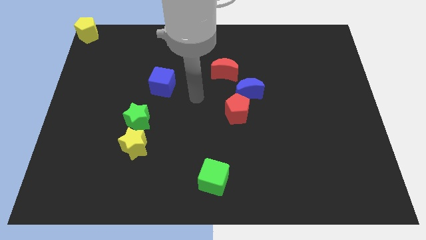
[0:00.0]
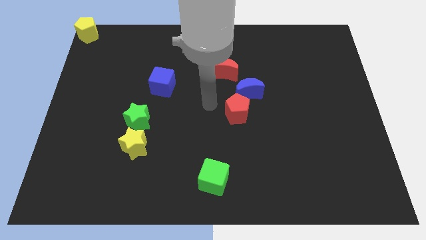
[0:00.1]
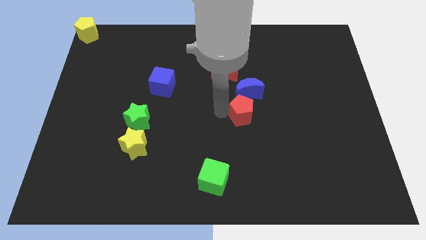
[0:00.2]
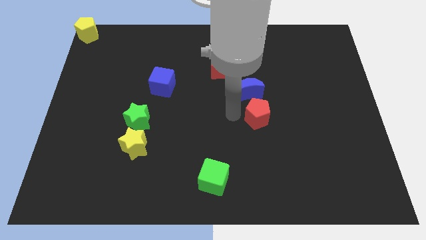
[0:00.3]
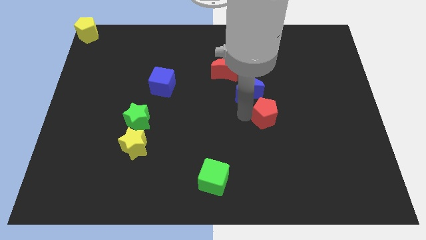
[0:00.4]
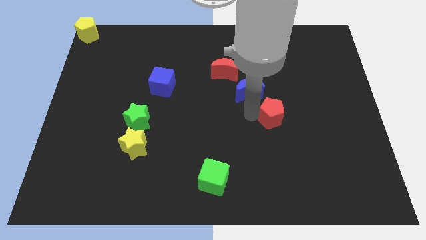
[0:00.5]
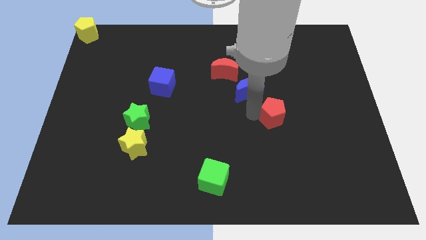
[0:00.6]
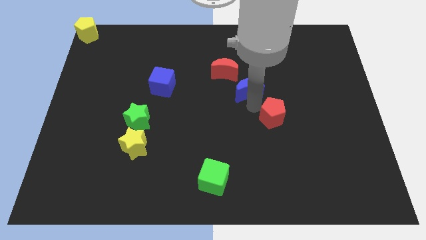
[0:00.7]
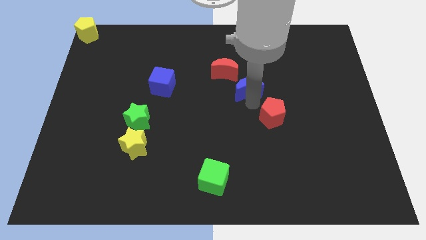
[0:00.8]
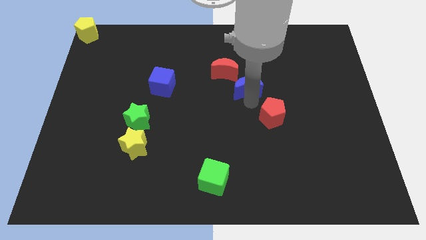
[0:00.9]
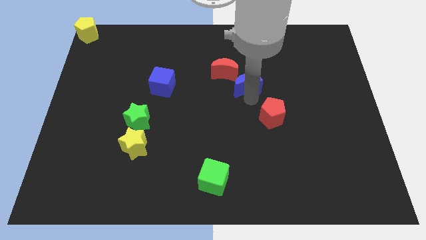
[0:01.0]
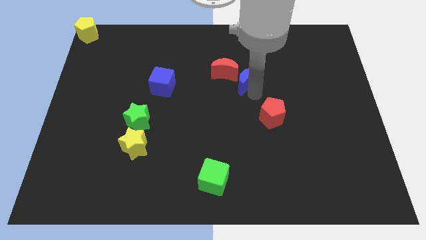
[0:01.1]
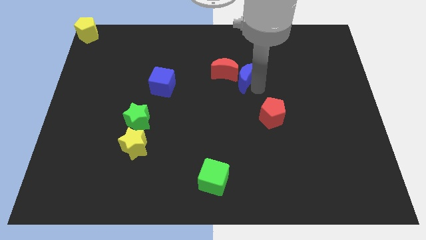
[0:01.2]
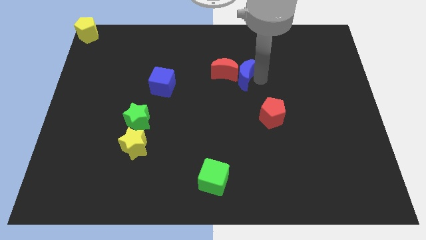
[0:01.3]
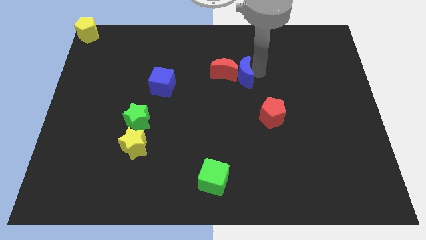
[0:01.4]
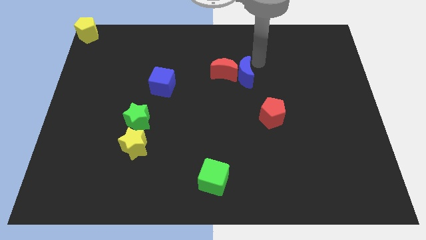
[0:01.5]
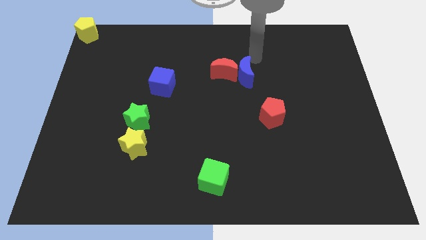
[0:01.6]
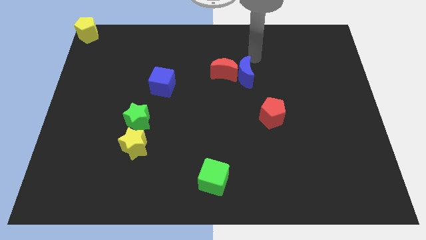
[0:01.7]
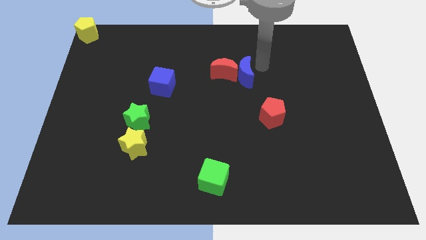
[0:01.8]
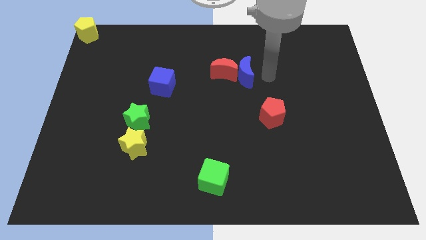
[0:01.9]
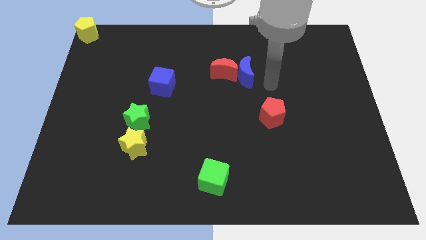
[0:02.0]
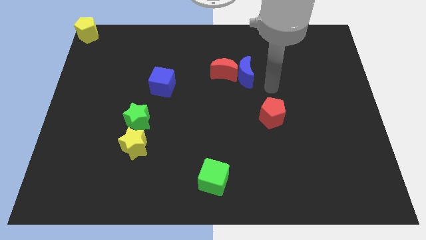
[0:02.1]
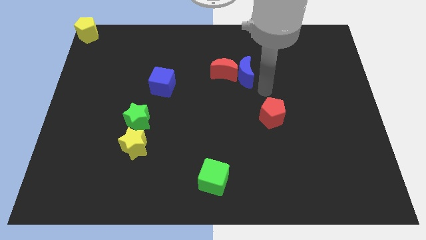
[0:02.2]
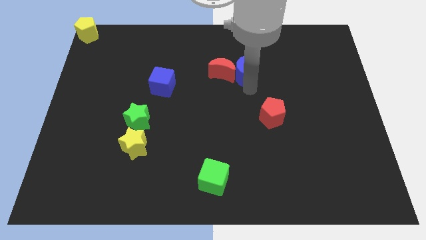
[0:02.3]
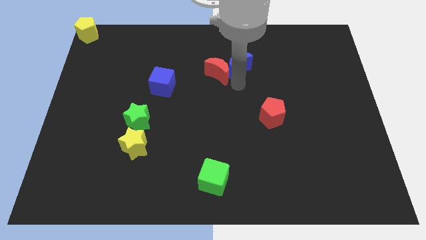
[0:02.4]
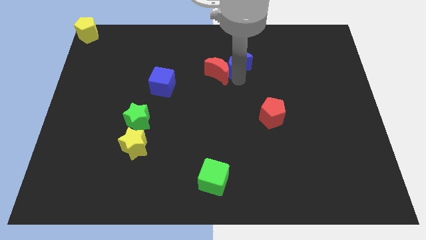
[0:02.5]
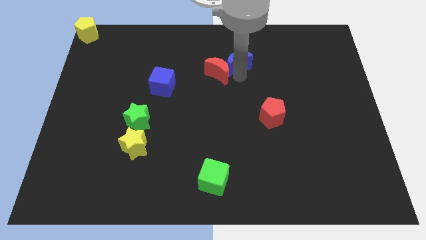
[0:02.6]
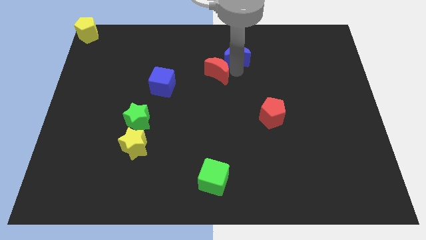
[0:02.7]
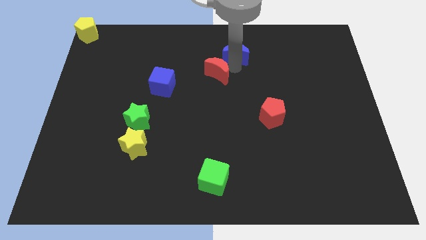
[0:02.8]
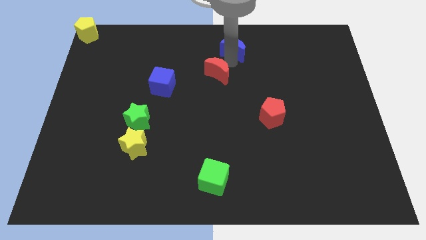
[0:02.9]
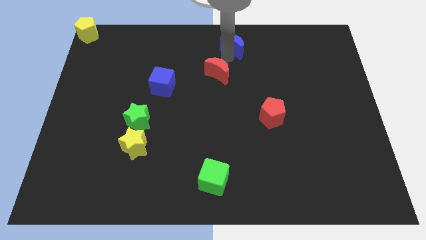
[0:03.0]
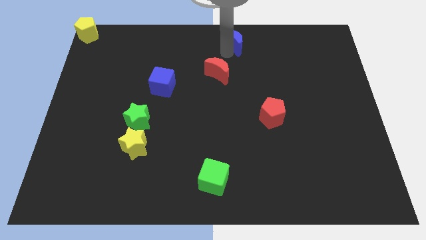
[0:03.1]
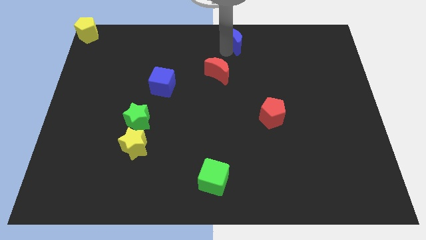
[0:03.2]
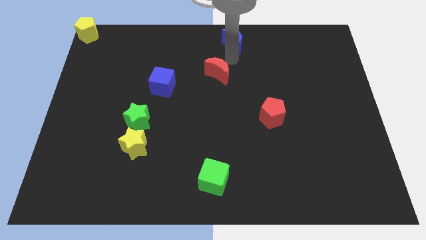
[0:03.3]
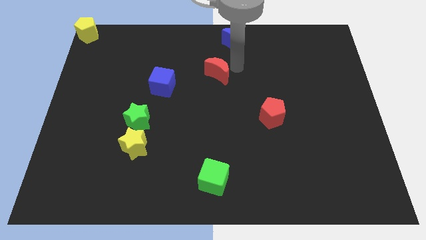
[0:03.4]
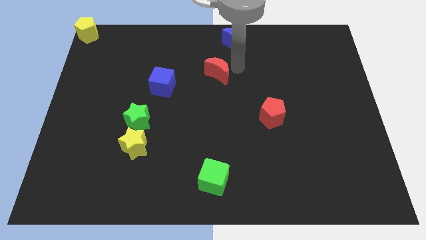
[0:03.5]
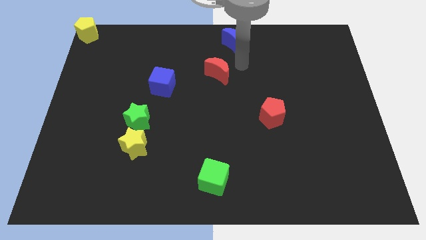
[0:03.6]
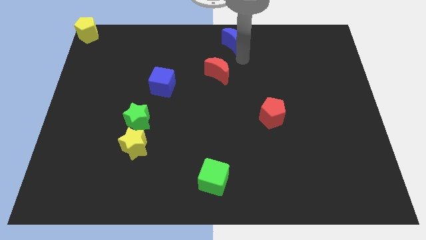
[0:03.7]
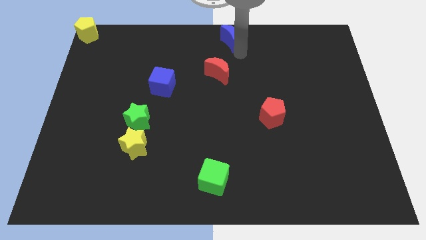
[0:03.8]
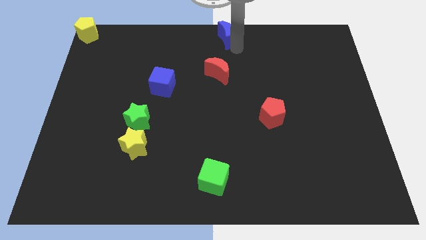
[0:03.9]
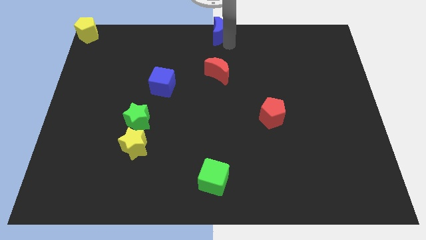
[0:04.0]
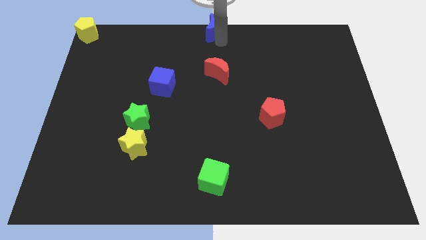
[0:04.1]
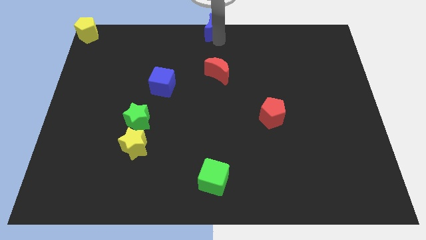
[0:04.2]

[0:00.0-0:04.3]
place the blue crescent at the top center of the board

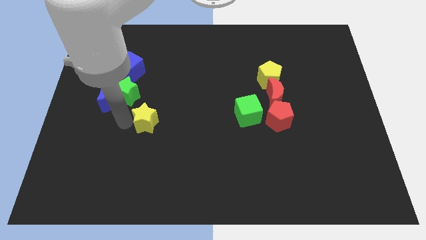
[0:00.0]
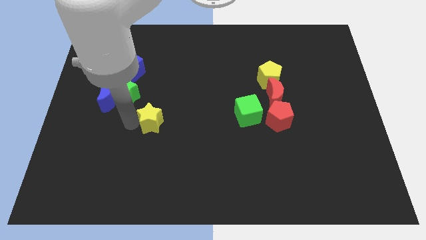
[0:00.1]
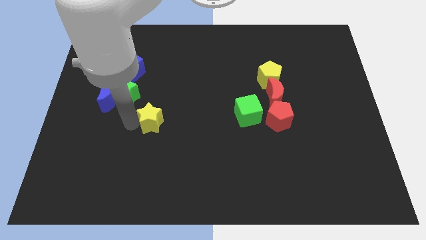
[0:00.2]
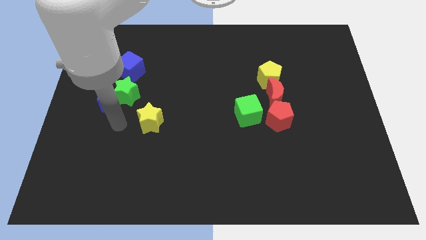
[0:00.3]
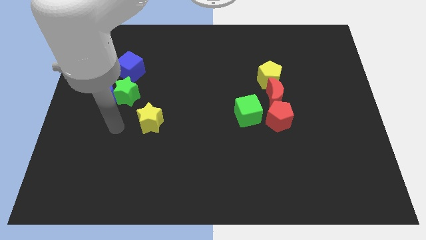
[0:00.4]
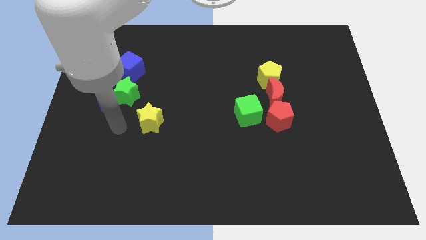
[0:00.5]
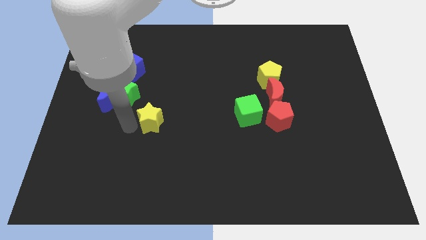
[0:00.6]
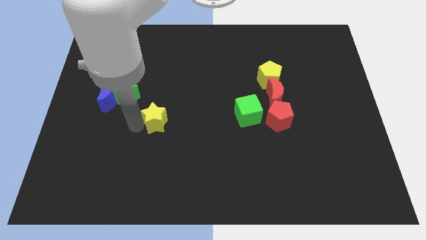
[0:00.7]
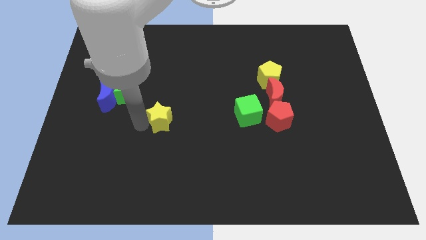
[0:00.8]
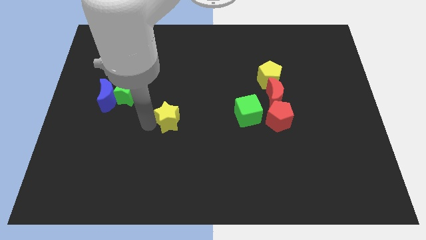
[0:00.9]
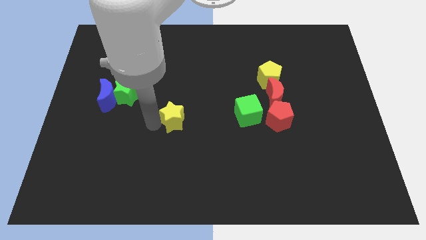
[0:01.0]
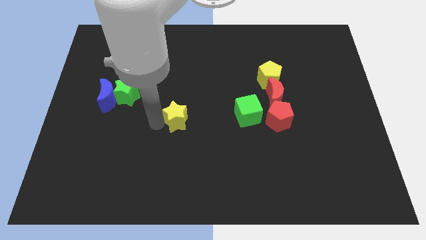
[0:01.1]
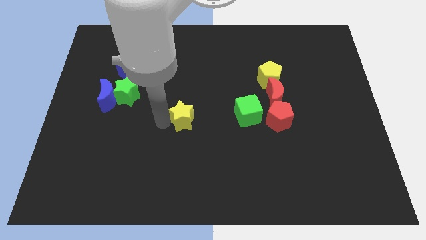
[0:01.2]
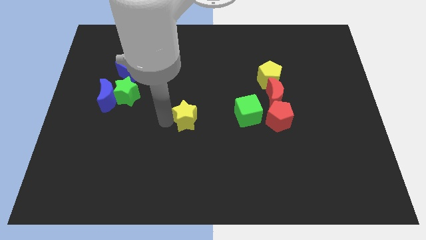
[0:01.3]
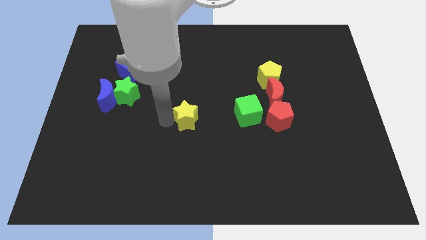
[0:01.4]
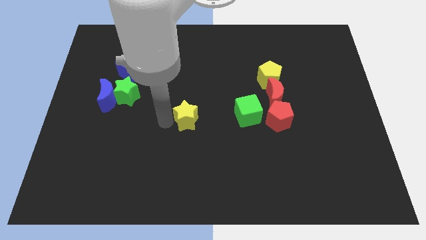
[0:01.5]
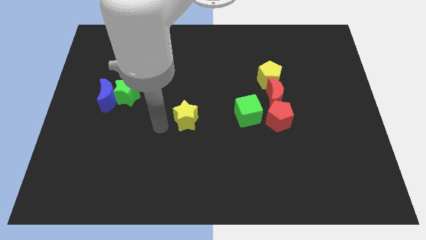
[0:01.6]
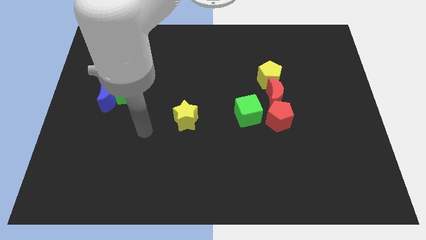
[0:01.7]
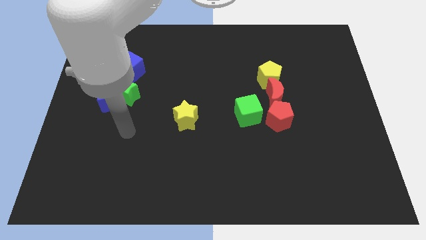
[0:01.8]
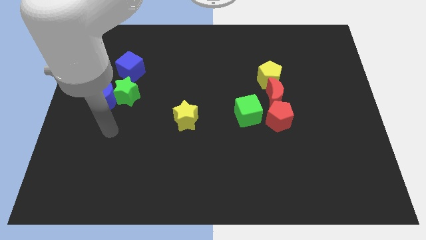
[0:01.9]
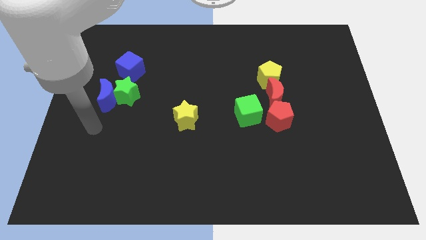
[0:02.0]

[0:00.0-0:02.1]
move yellow star towards center

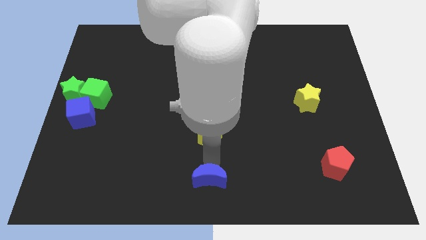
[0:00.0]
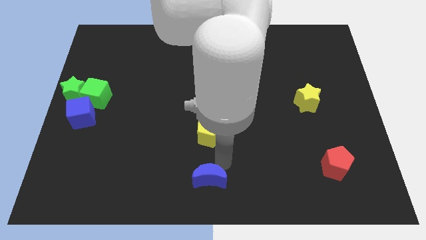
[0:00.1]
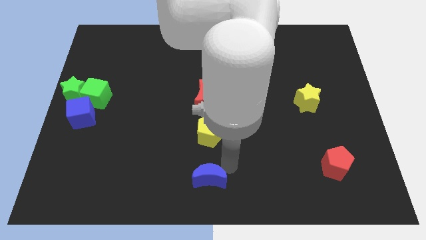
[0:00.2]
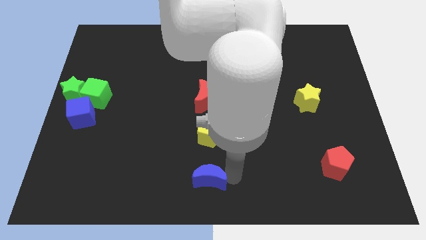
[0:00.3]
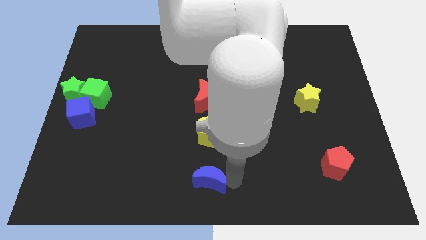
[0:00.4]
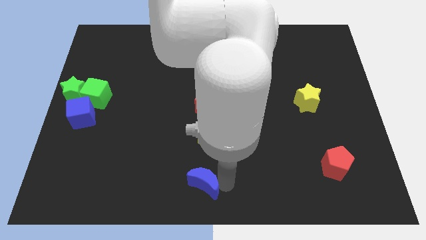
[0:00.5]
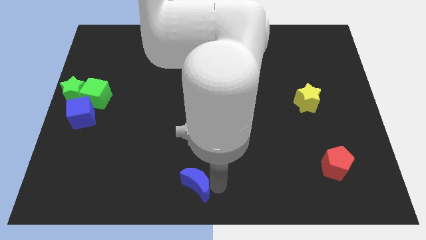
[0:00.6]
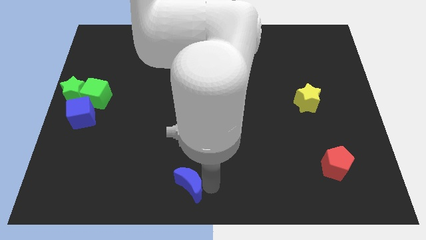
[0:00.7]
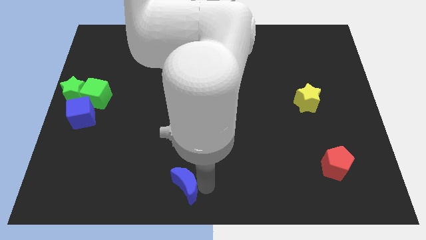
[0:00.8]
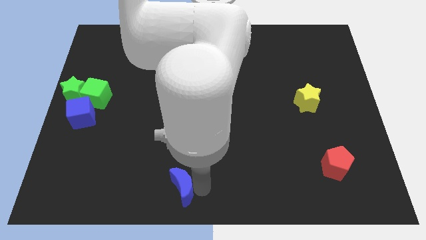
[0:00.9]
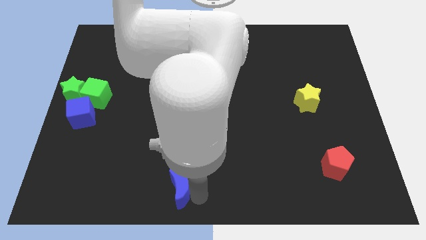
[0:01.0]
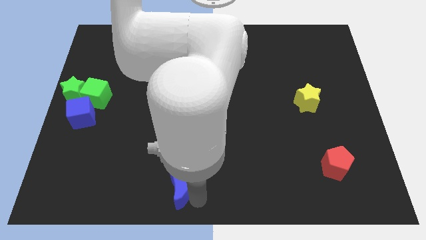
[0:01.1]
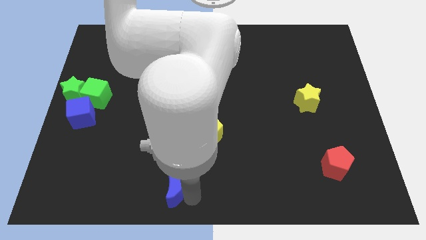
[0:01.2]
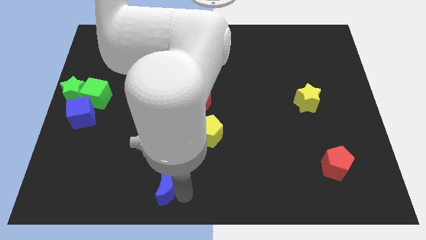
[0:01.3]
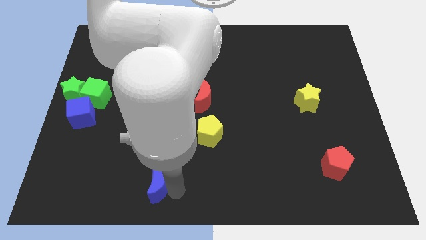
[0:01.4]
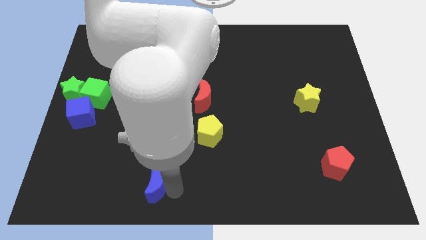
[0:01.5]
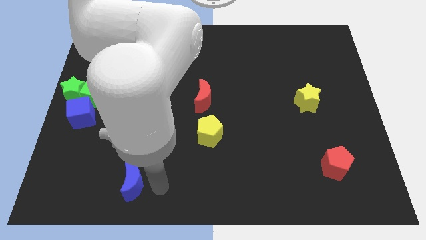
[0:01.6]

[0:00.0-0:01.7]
move the blue crescent to the bottom left of the board

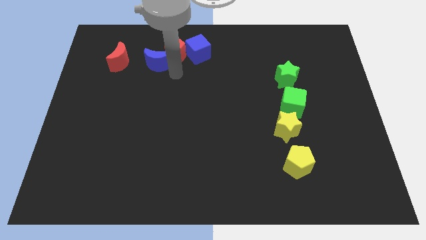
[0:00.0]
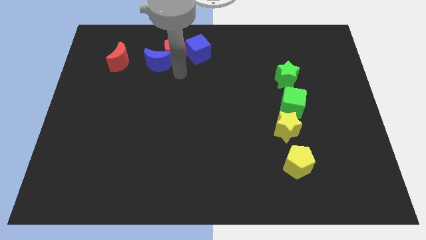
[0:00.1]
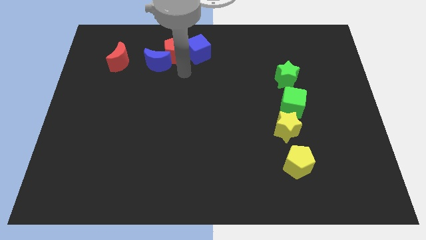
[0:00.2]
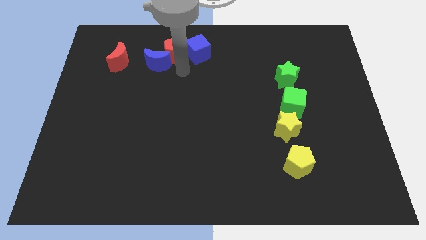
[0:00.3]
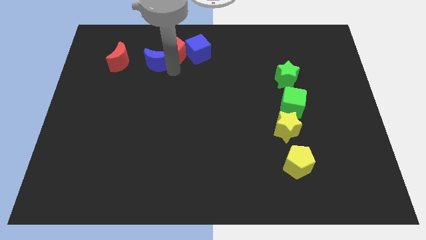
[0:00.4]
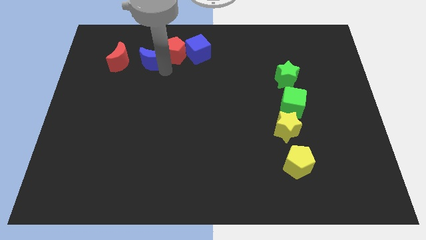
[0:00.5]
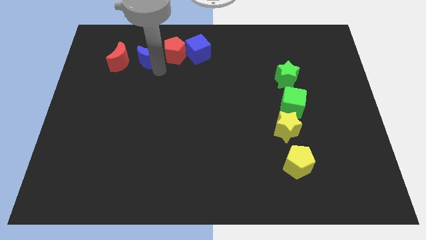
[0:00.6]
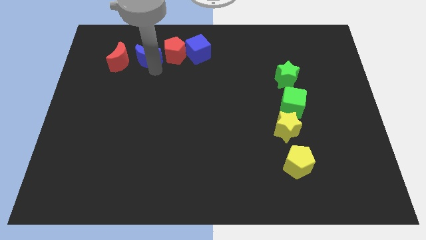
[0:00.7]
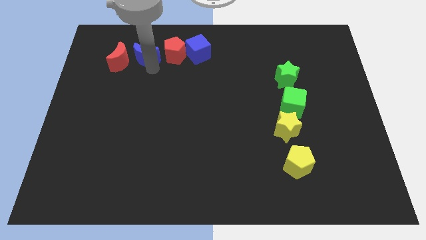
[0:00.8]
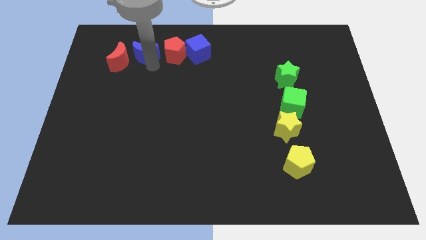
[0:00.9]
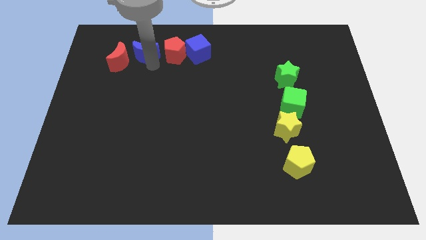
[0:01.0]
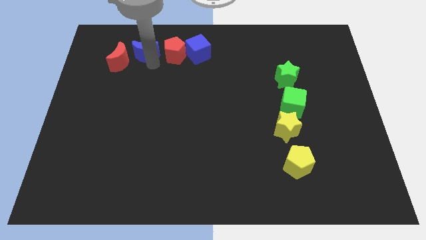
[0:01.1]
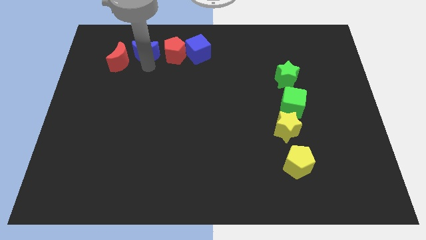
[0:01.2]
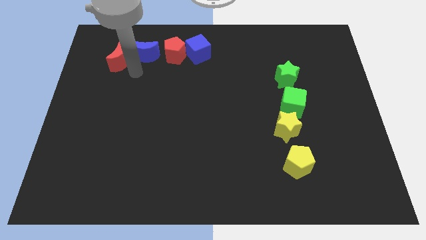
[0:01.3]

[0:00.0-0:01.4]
slide the blue crescent to the left side of the red pentagon
